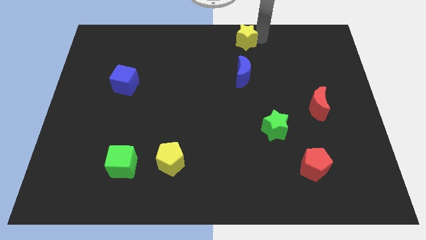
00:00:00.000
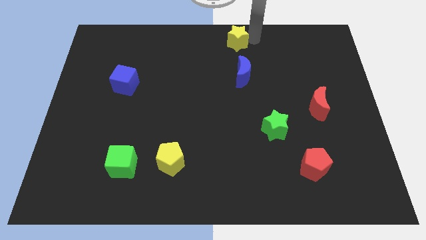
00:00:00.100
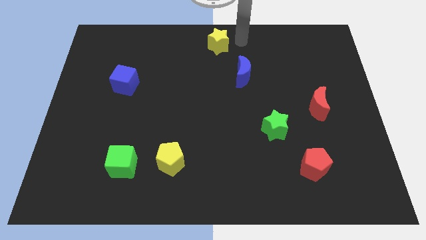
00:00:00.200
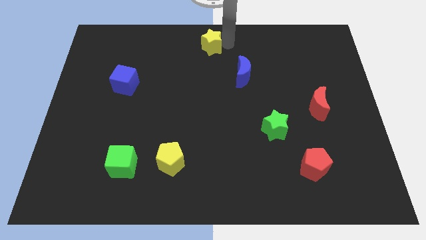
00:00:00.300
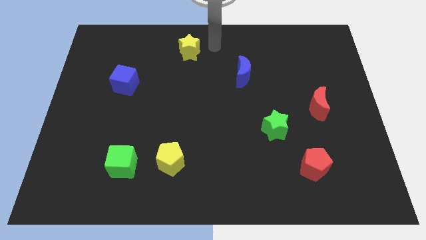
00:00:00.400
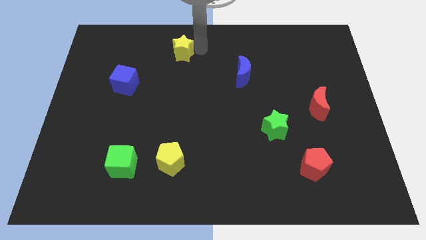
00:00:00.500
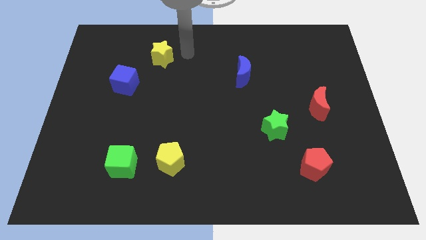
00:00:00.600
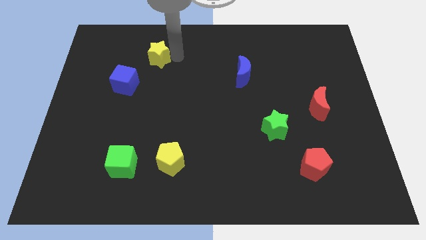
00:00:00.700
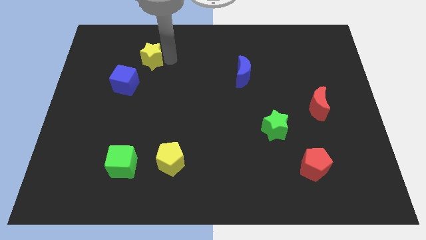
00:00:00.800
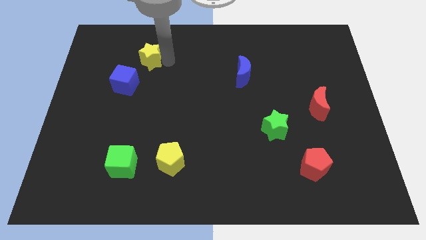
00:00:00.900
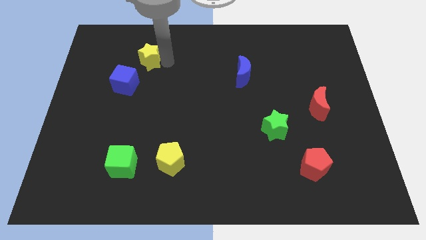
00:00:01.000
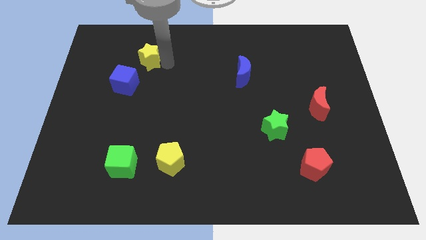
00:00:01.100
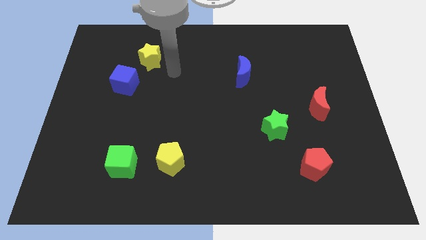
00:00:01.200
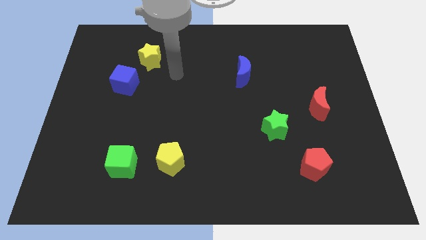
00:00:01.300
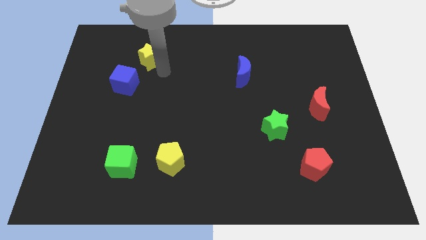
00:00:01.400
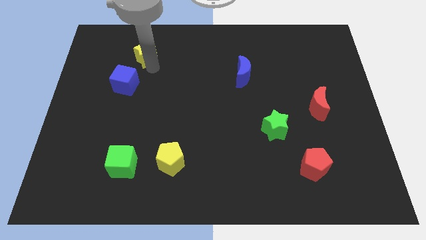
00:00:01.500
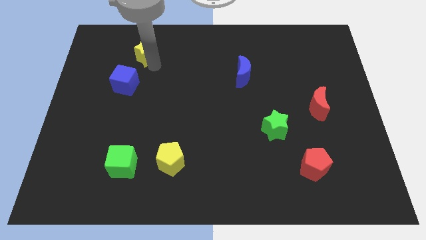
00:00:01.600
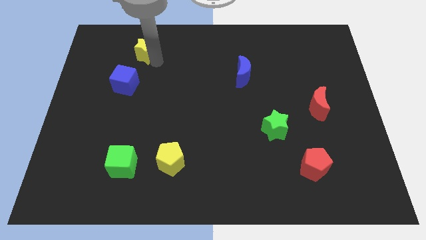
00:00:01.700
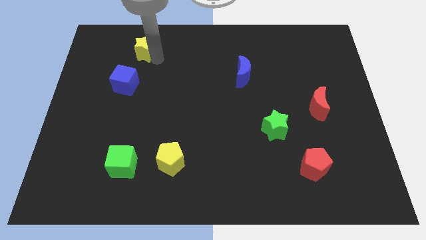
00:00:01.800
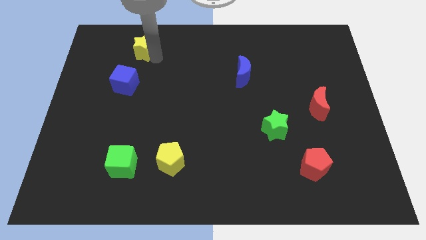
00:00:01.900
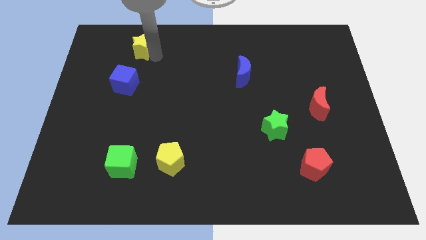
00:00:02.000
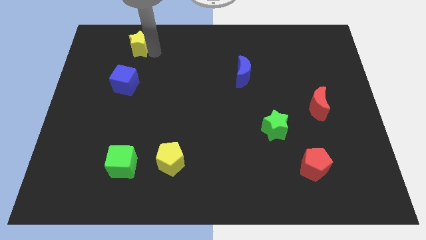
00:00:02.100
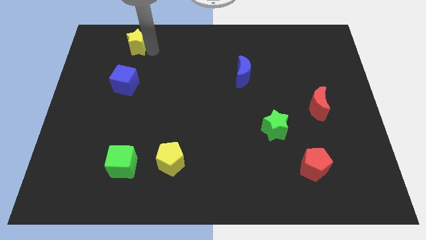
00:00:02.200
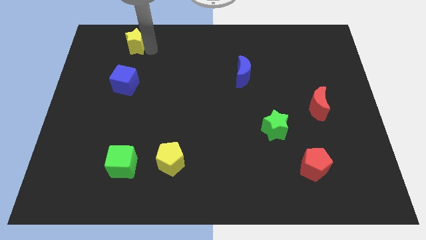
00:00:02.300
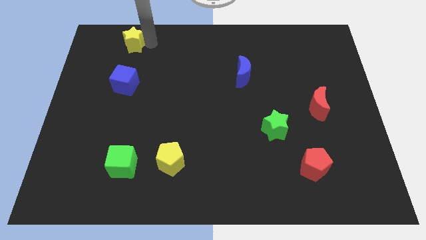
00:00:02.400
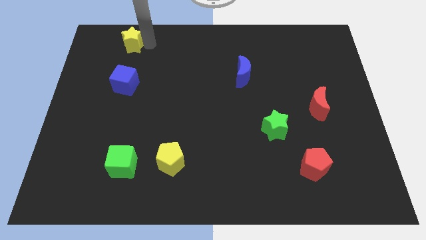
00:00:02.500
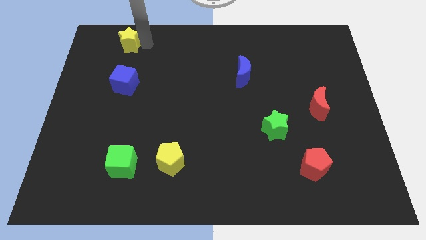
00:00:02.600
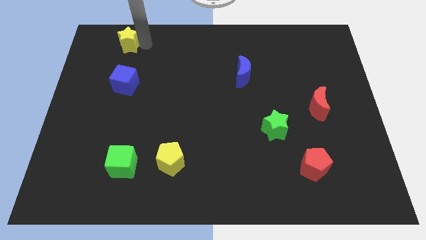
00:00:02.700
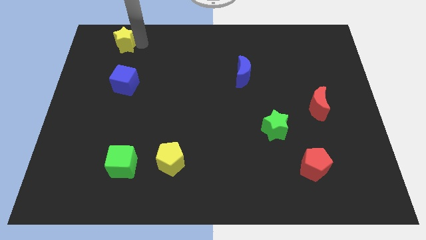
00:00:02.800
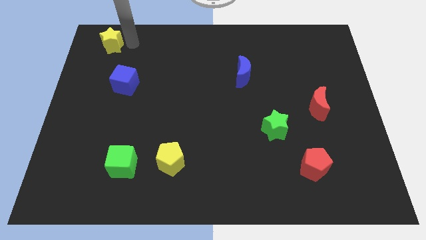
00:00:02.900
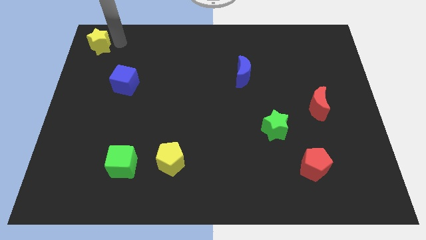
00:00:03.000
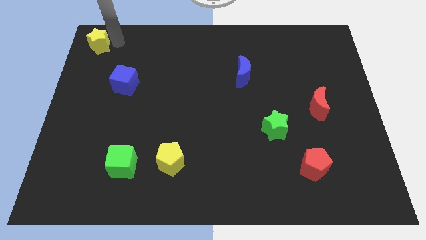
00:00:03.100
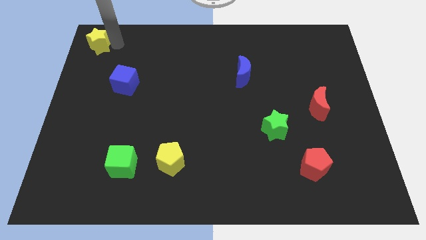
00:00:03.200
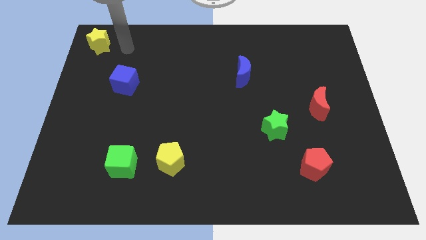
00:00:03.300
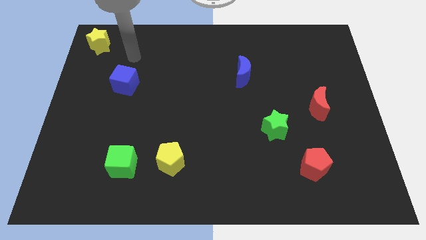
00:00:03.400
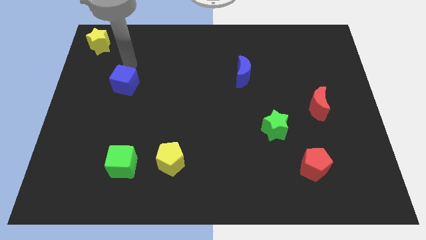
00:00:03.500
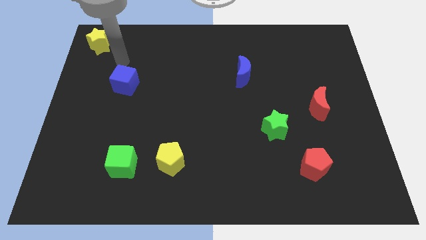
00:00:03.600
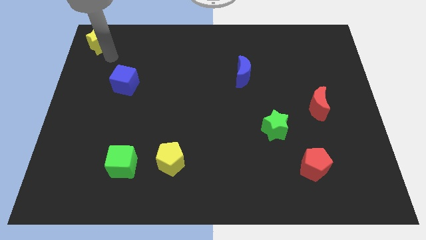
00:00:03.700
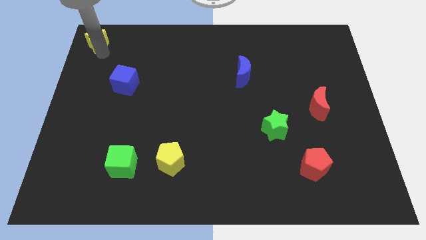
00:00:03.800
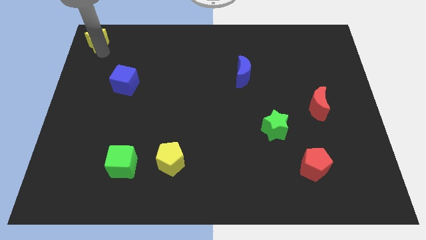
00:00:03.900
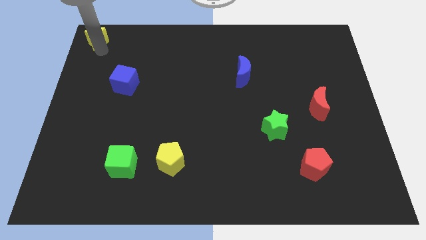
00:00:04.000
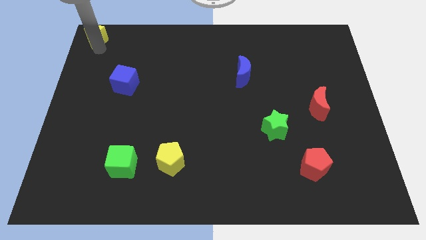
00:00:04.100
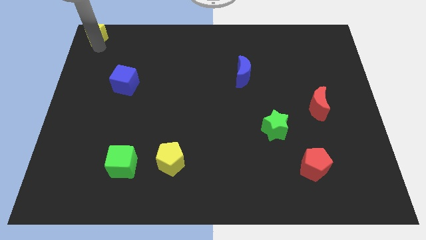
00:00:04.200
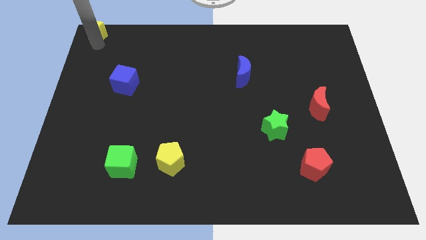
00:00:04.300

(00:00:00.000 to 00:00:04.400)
move the yellow star to the top left corner

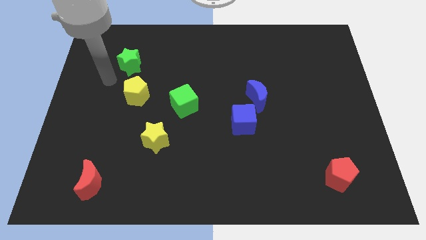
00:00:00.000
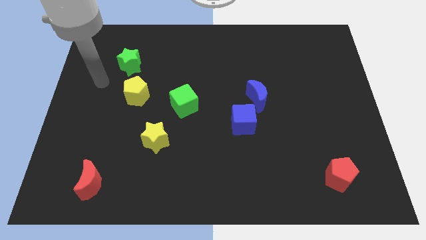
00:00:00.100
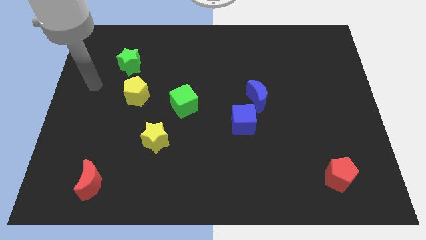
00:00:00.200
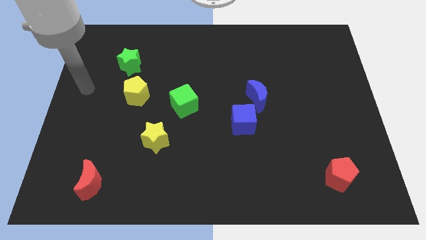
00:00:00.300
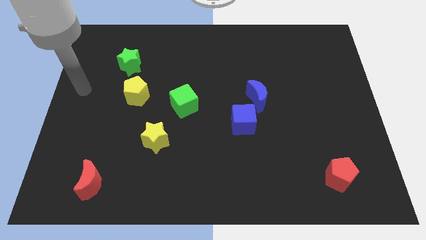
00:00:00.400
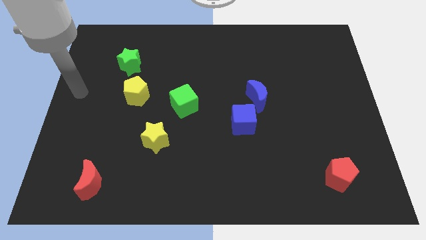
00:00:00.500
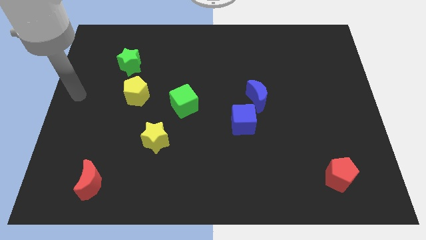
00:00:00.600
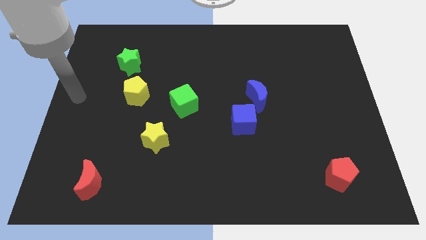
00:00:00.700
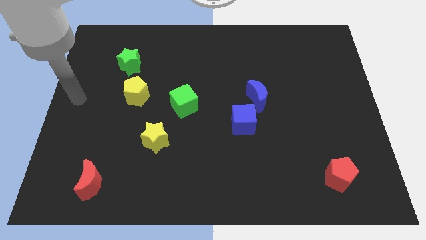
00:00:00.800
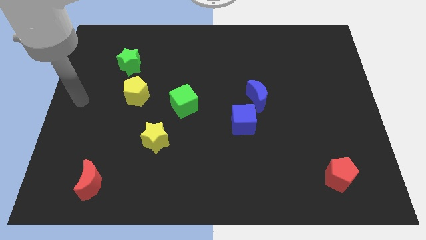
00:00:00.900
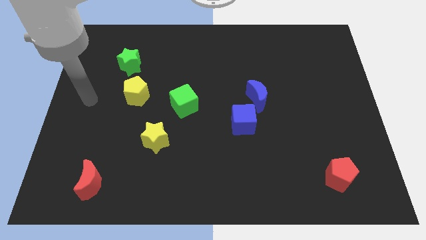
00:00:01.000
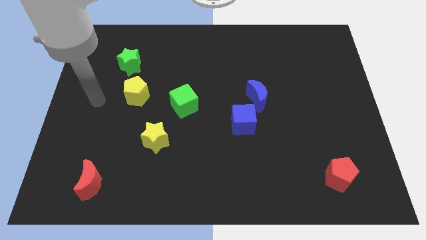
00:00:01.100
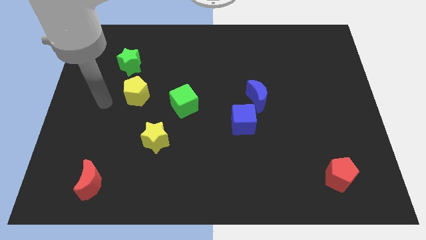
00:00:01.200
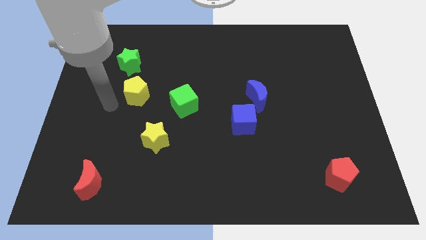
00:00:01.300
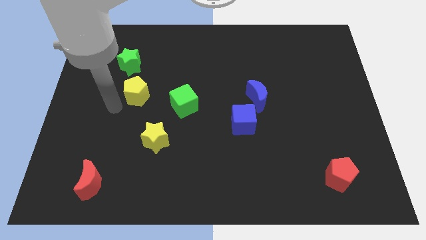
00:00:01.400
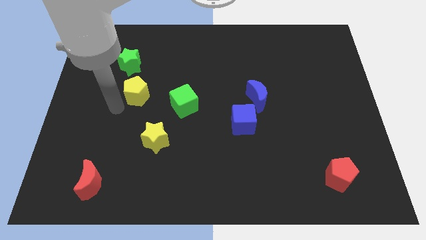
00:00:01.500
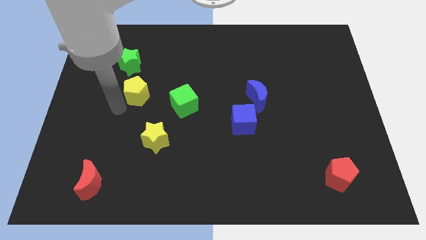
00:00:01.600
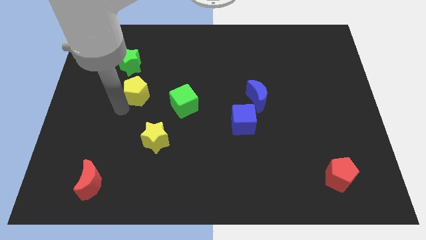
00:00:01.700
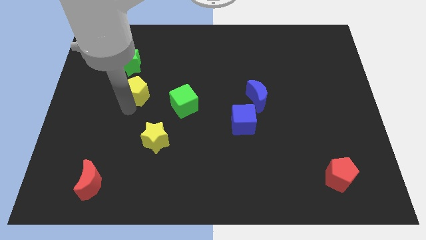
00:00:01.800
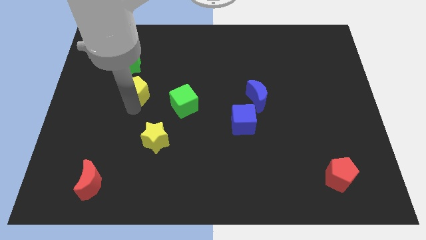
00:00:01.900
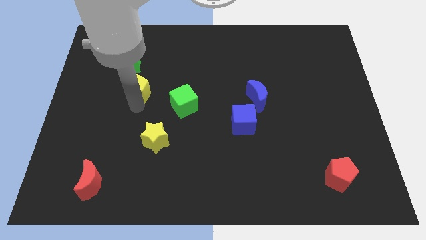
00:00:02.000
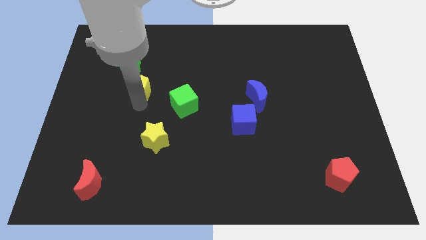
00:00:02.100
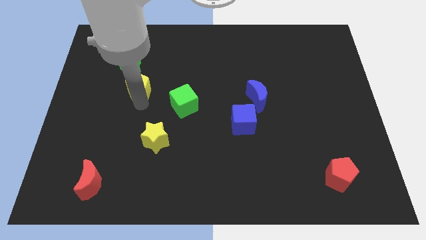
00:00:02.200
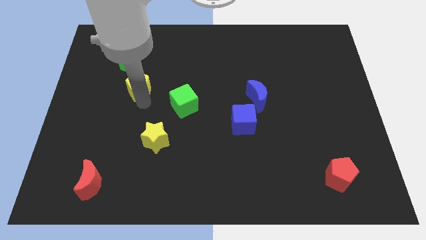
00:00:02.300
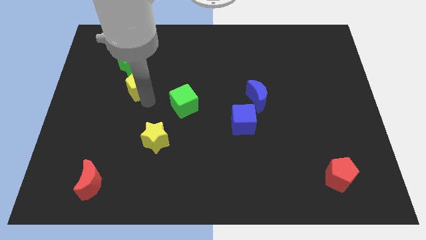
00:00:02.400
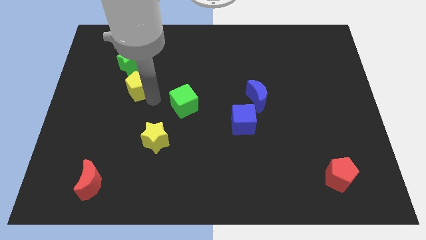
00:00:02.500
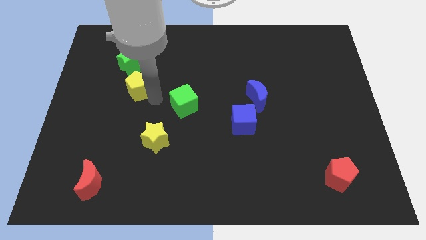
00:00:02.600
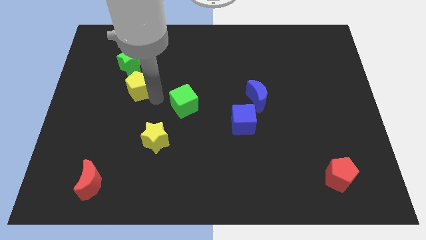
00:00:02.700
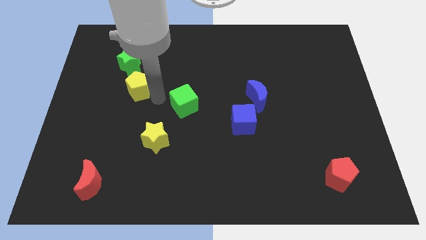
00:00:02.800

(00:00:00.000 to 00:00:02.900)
move yellow pentagon slightly towards green star

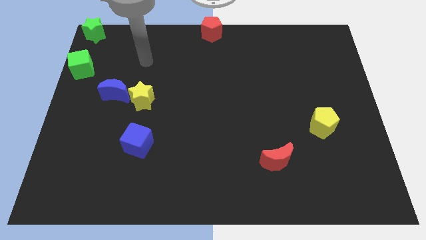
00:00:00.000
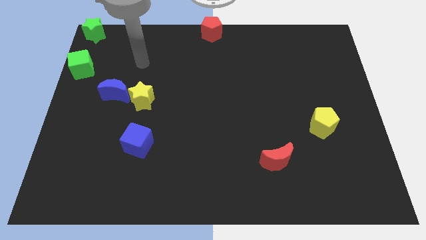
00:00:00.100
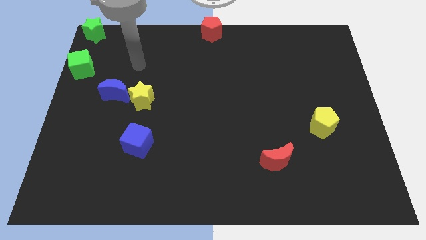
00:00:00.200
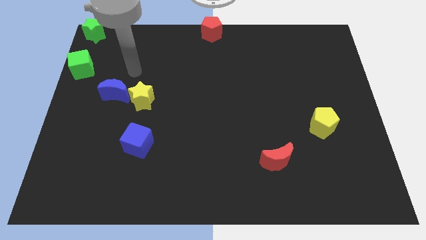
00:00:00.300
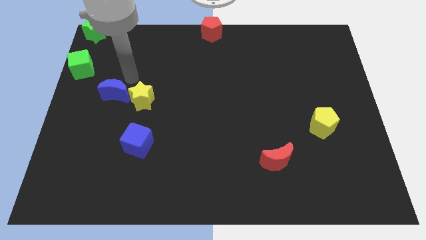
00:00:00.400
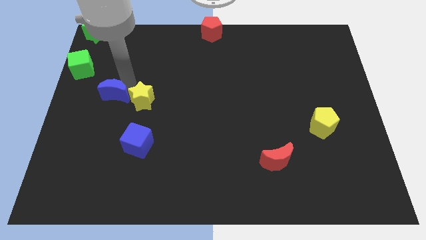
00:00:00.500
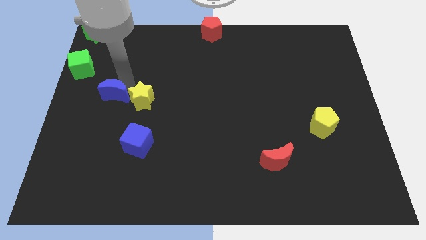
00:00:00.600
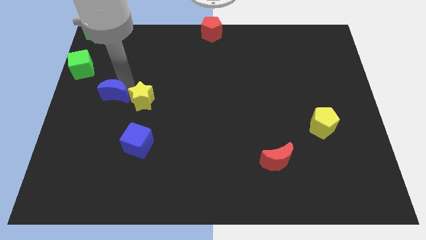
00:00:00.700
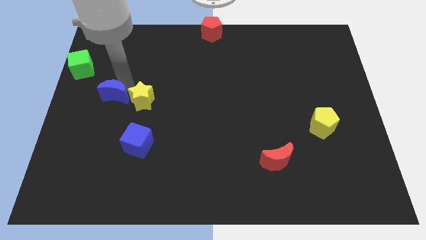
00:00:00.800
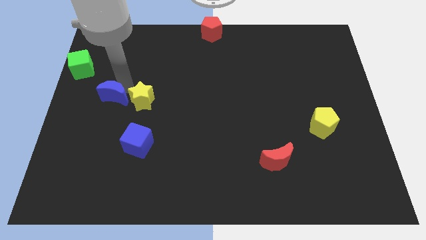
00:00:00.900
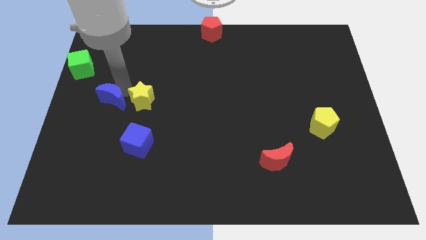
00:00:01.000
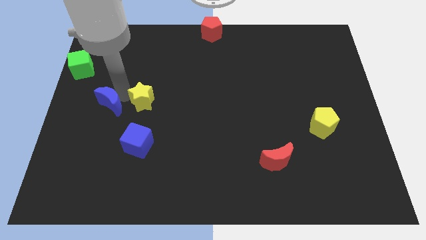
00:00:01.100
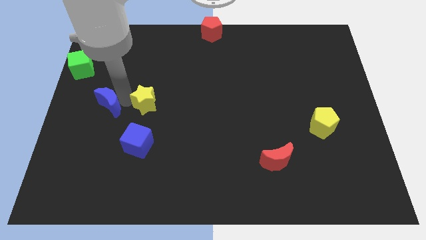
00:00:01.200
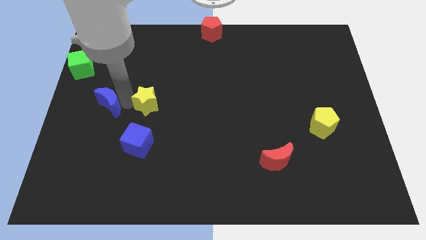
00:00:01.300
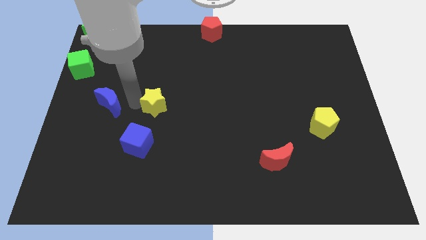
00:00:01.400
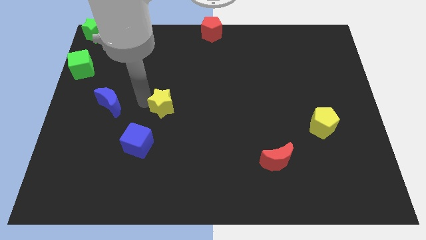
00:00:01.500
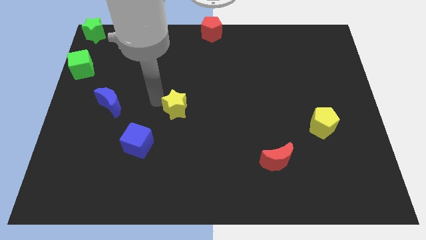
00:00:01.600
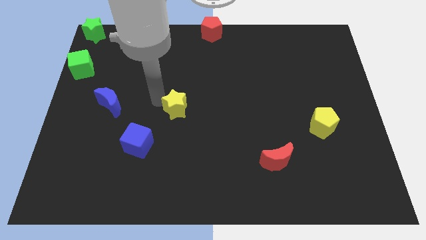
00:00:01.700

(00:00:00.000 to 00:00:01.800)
separate blue crescent and the yellow star
